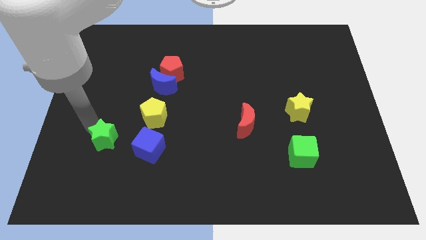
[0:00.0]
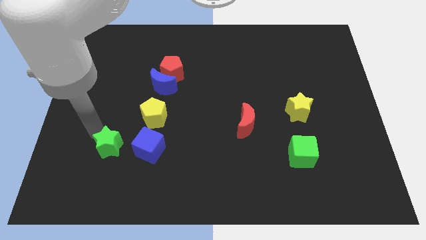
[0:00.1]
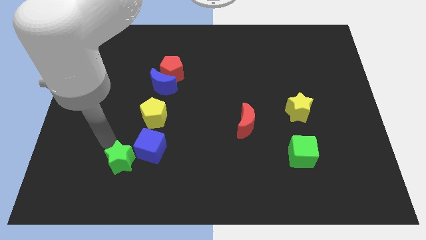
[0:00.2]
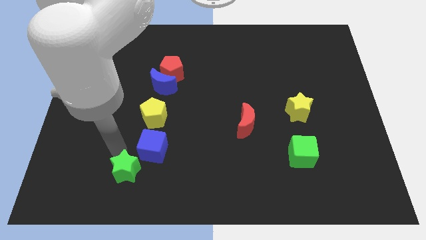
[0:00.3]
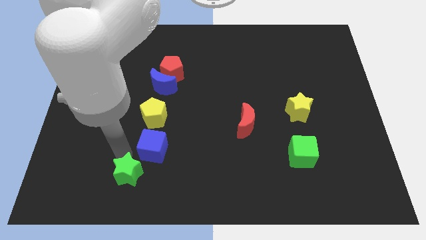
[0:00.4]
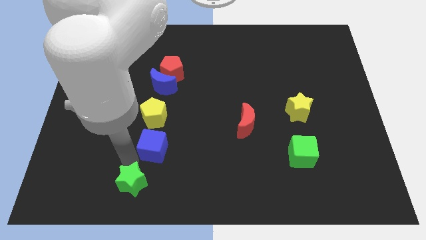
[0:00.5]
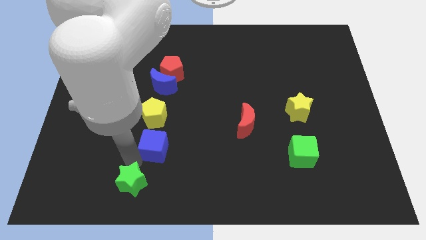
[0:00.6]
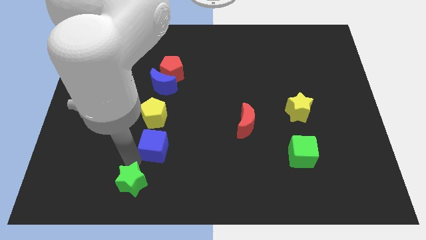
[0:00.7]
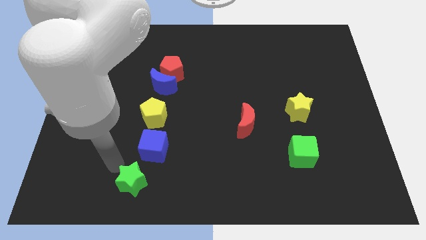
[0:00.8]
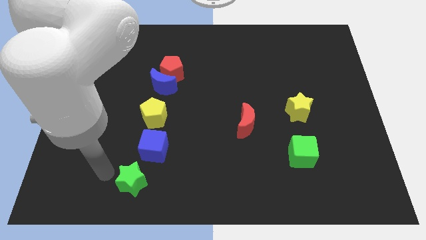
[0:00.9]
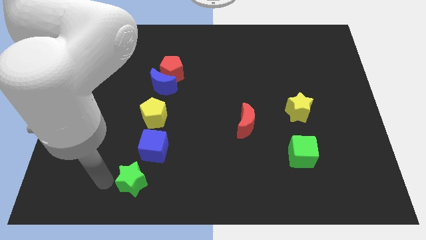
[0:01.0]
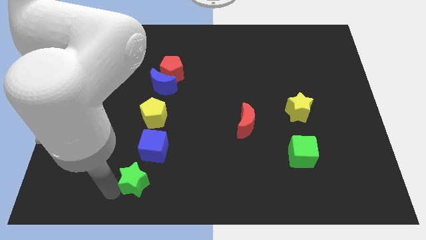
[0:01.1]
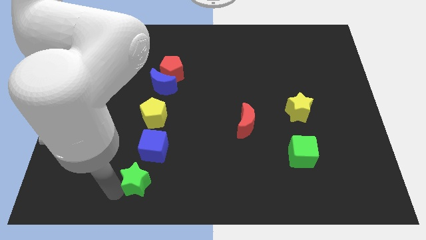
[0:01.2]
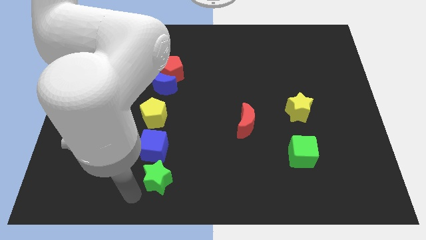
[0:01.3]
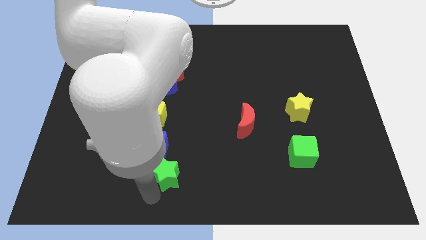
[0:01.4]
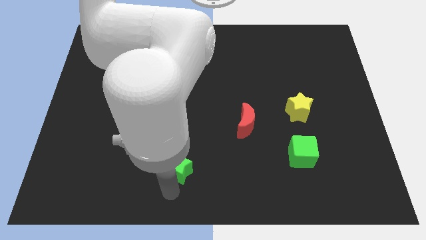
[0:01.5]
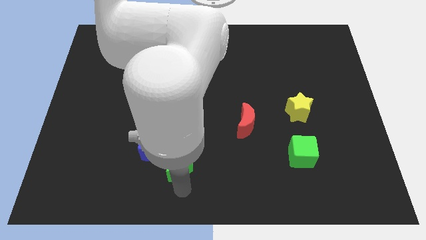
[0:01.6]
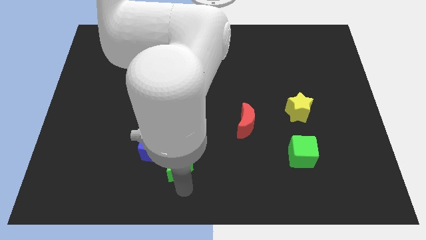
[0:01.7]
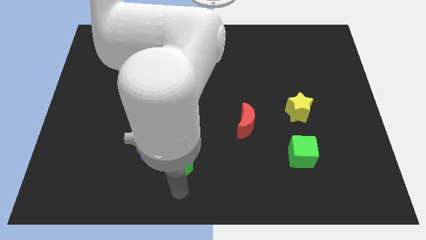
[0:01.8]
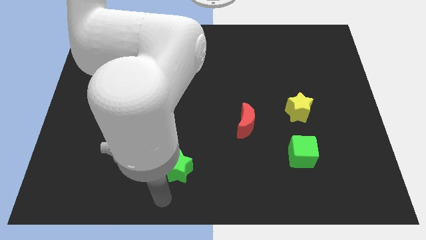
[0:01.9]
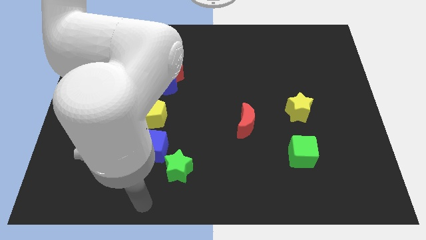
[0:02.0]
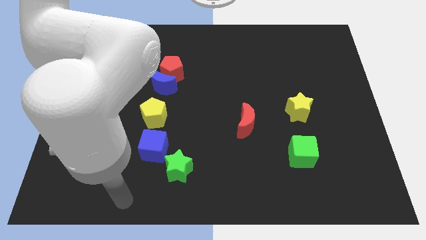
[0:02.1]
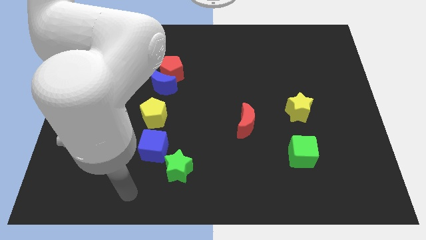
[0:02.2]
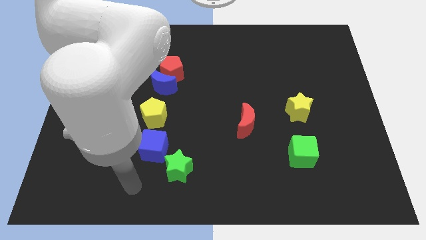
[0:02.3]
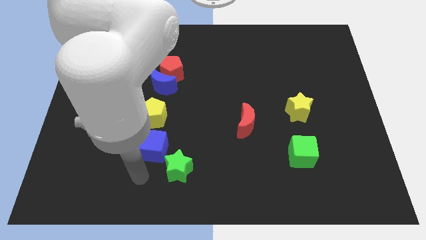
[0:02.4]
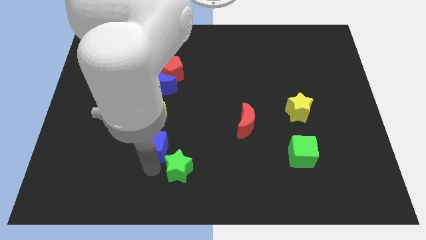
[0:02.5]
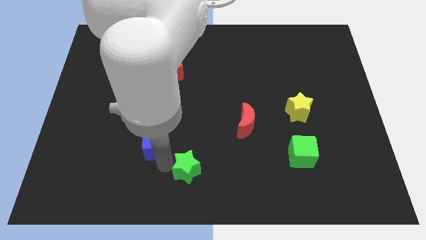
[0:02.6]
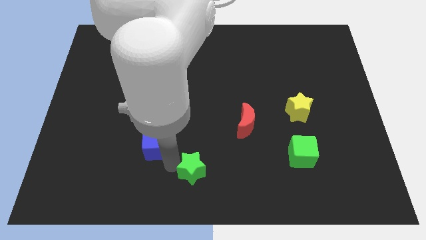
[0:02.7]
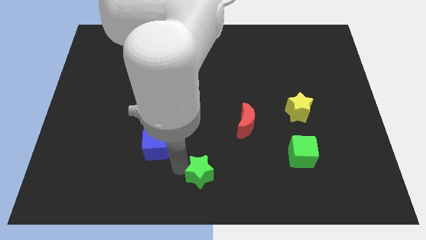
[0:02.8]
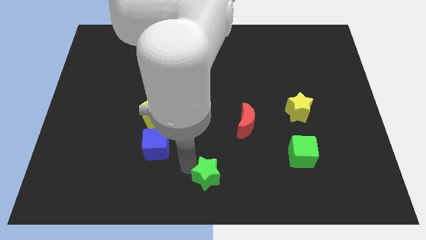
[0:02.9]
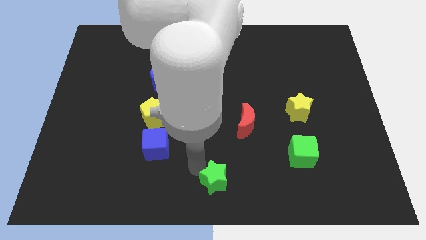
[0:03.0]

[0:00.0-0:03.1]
place the green star diagonal to the yellow star

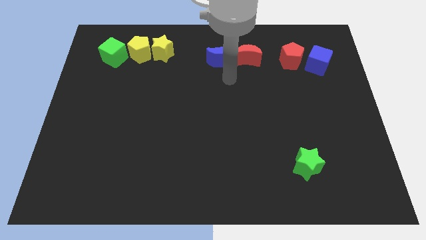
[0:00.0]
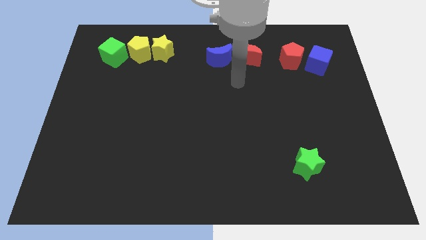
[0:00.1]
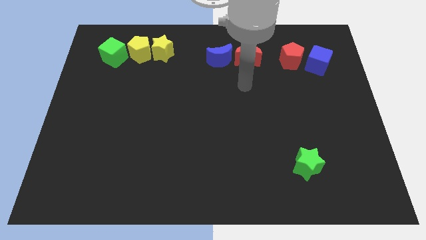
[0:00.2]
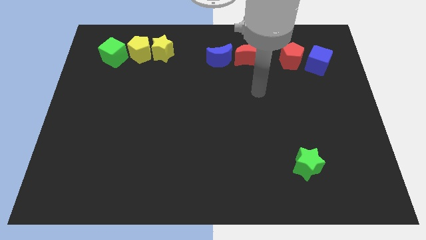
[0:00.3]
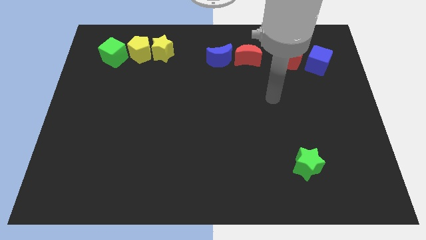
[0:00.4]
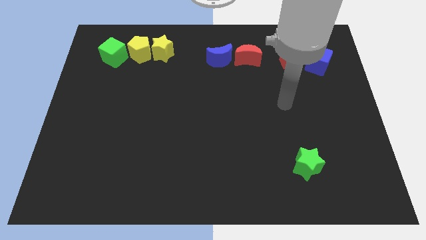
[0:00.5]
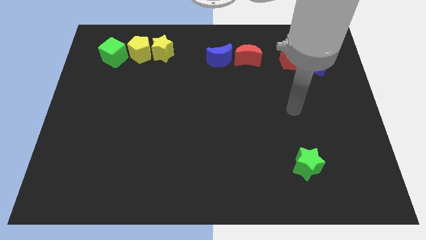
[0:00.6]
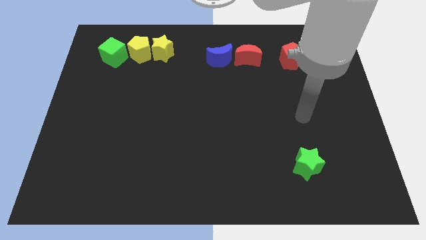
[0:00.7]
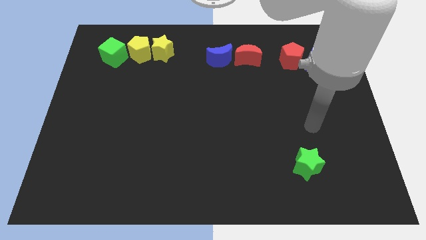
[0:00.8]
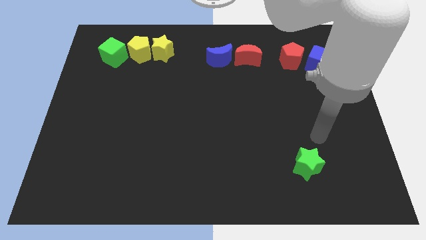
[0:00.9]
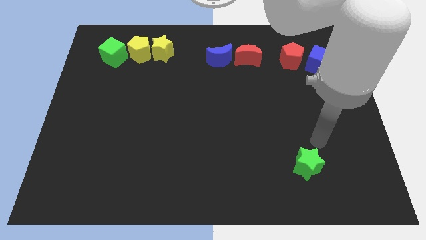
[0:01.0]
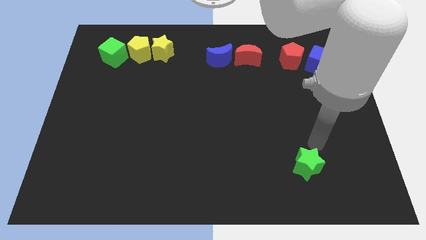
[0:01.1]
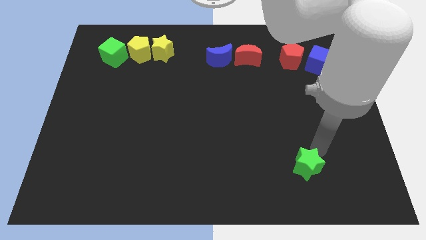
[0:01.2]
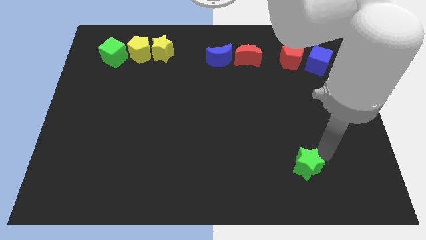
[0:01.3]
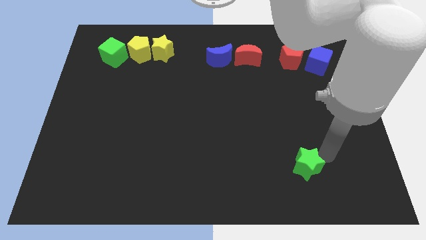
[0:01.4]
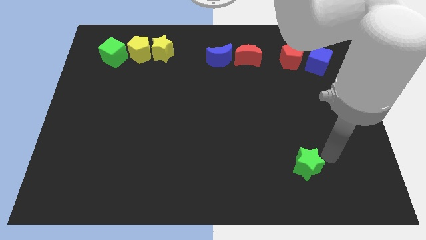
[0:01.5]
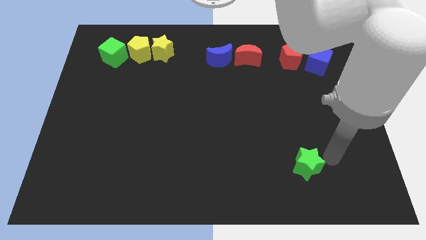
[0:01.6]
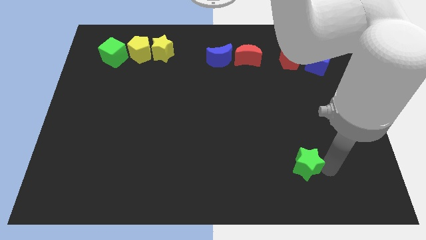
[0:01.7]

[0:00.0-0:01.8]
place the arm right to the green star

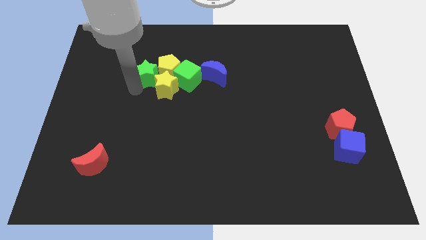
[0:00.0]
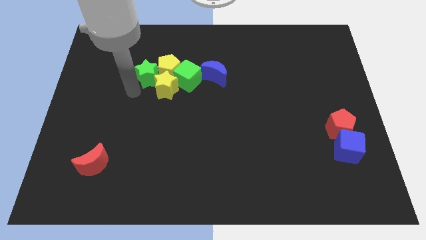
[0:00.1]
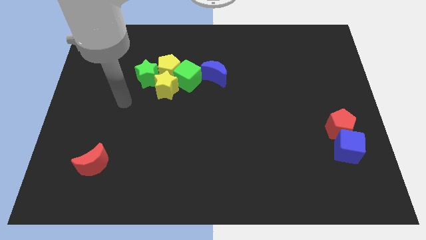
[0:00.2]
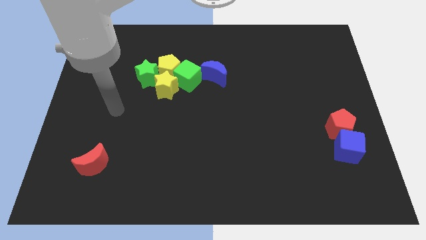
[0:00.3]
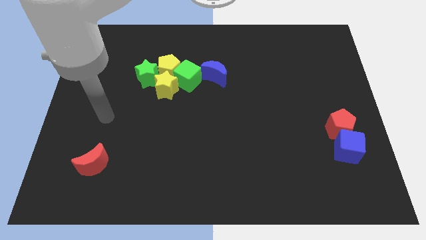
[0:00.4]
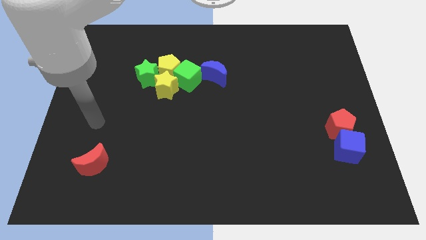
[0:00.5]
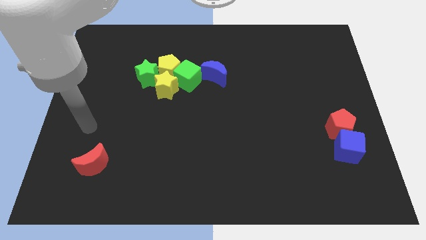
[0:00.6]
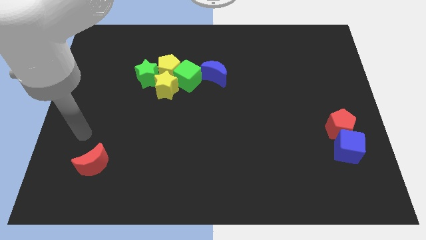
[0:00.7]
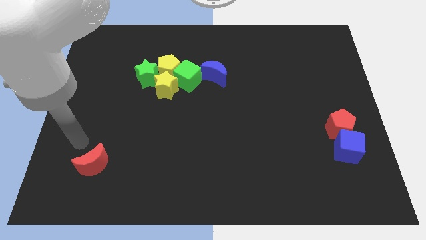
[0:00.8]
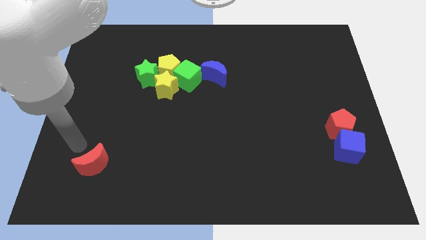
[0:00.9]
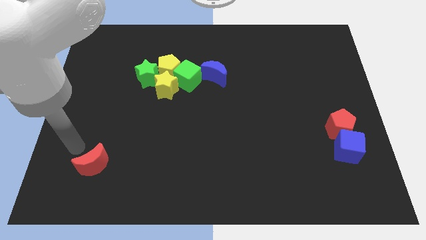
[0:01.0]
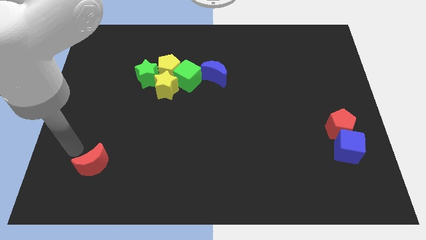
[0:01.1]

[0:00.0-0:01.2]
drag the arm away from the green star

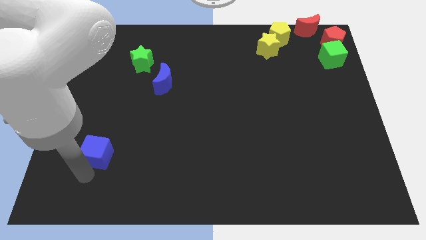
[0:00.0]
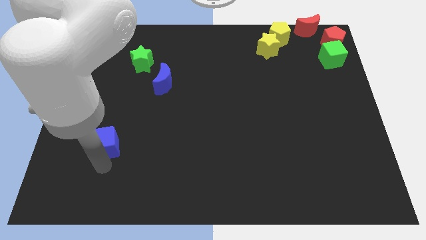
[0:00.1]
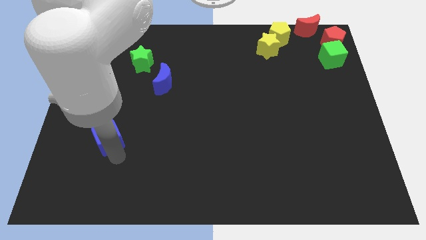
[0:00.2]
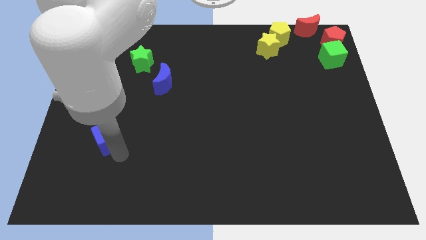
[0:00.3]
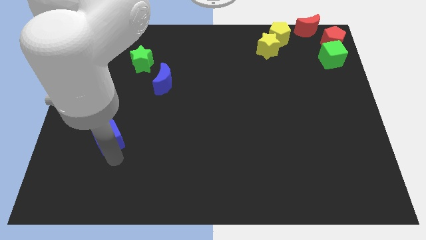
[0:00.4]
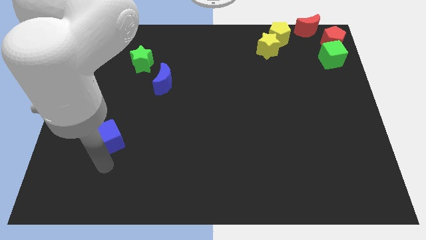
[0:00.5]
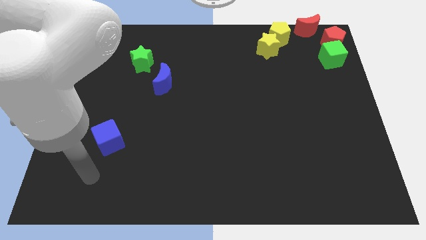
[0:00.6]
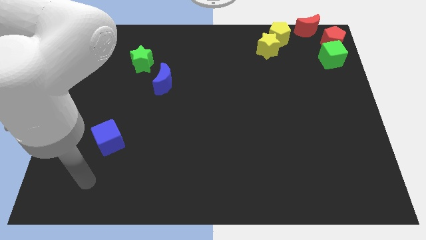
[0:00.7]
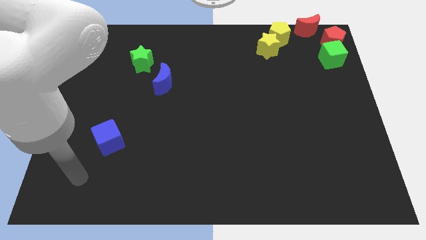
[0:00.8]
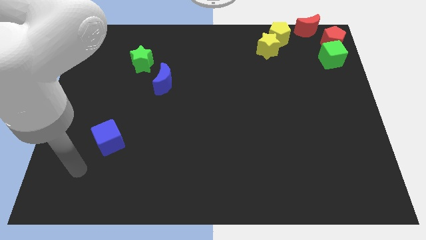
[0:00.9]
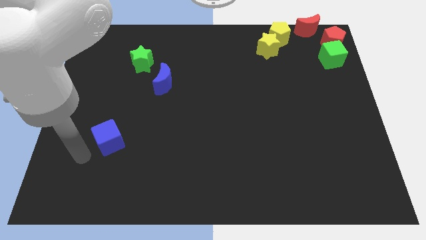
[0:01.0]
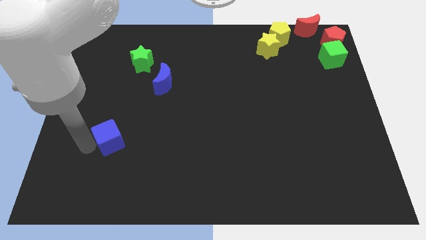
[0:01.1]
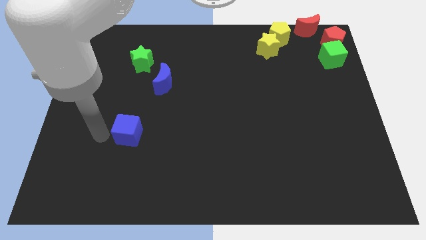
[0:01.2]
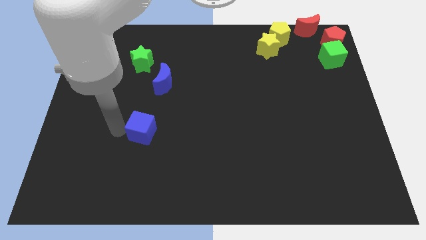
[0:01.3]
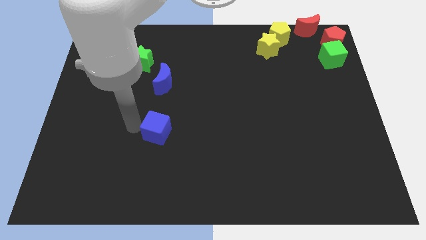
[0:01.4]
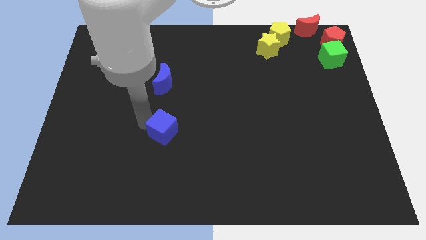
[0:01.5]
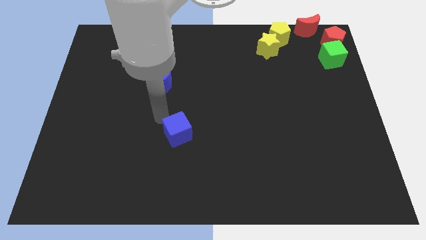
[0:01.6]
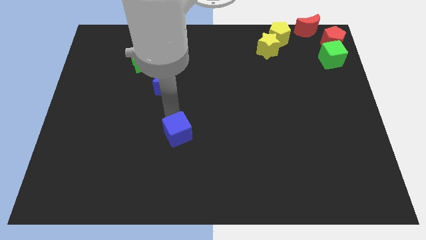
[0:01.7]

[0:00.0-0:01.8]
move the blue cube below blue moon

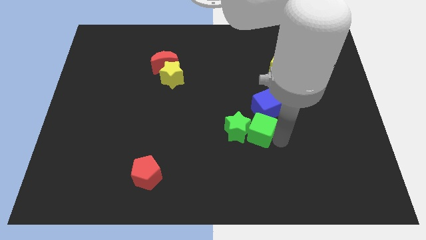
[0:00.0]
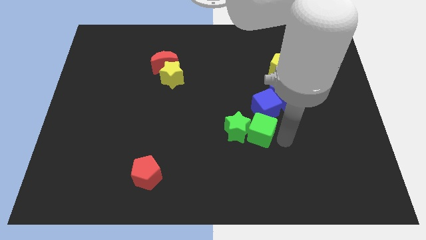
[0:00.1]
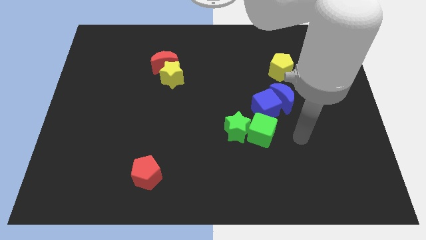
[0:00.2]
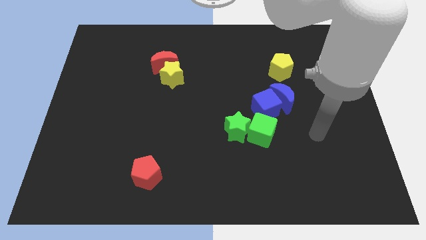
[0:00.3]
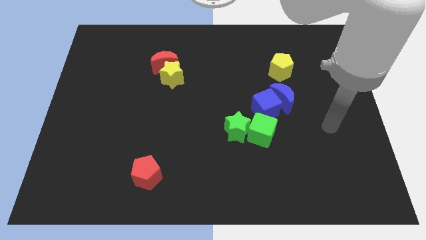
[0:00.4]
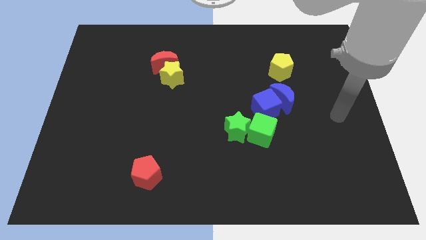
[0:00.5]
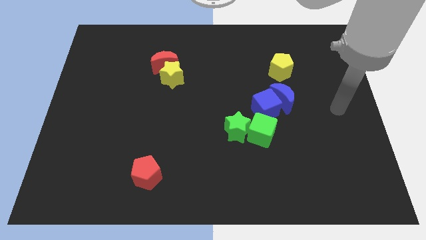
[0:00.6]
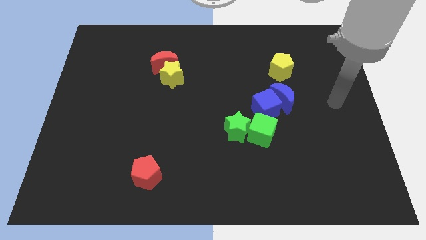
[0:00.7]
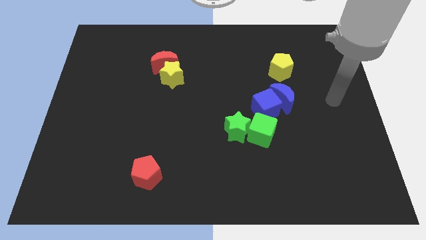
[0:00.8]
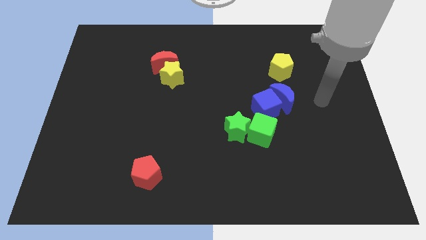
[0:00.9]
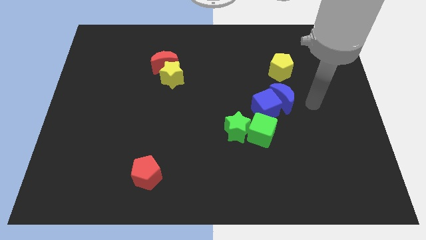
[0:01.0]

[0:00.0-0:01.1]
move your hand away from the green cube
